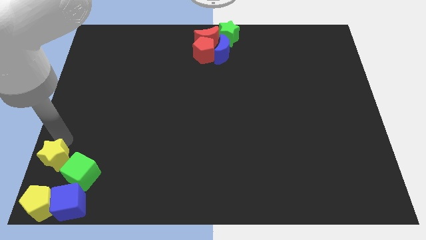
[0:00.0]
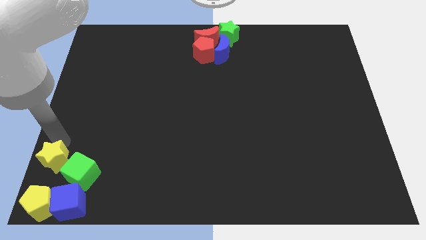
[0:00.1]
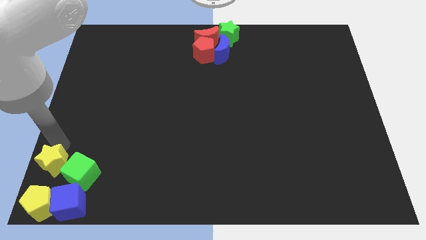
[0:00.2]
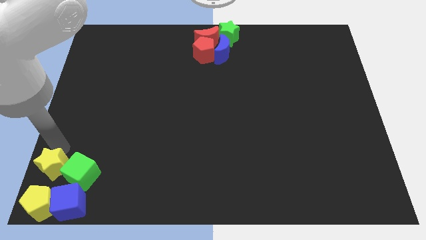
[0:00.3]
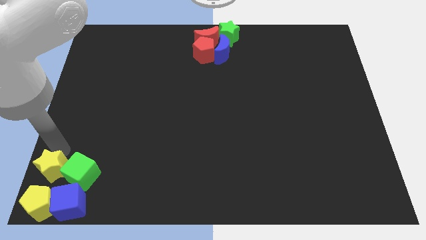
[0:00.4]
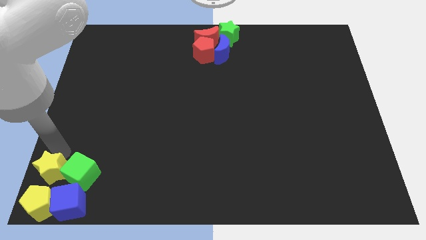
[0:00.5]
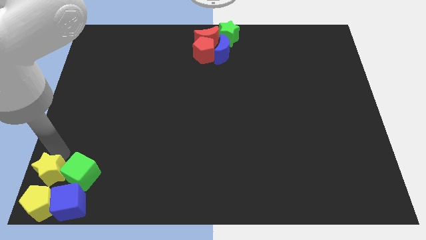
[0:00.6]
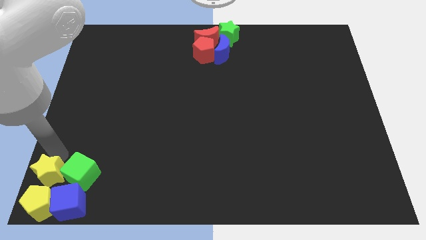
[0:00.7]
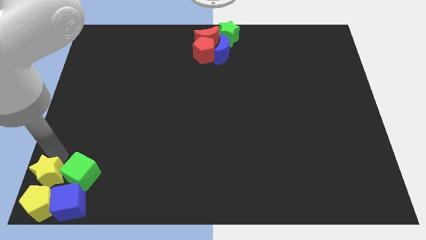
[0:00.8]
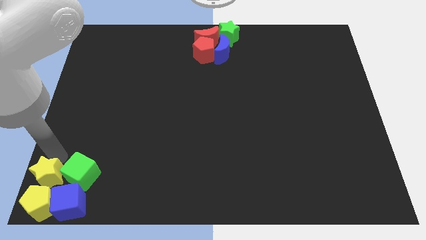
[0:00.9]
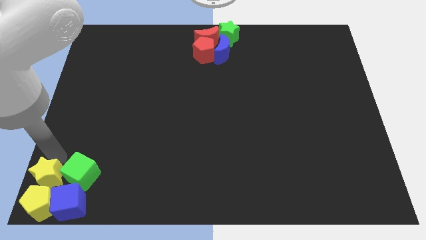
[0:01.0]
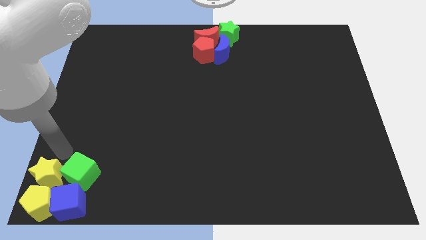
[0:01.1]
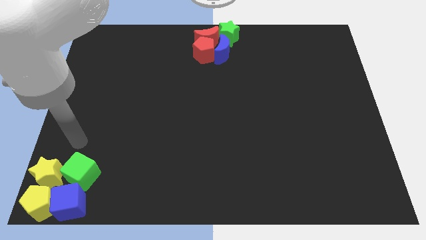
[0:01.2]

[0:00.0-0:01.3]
push the yellow star to the top of the yellow pentagon

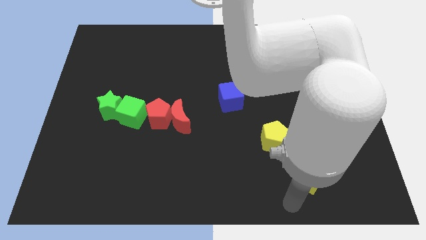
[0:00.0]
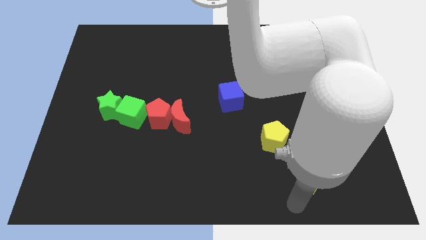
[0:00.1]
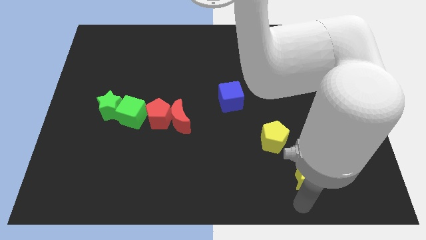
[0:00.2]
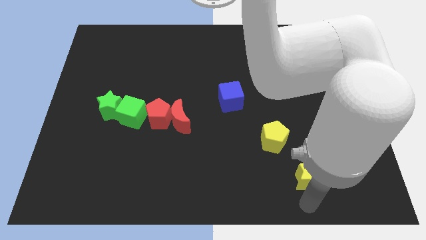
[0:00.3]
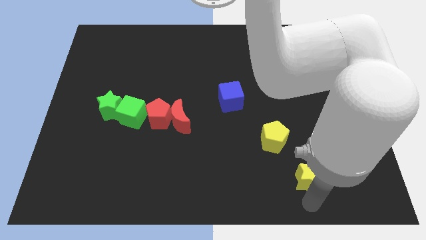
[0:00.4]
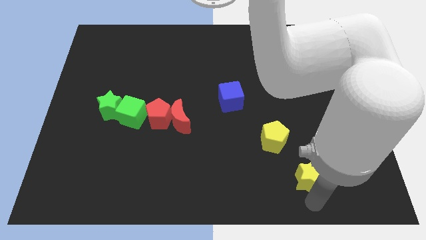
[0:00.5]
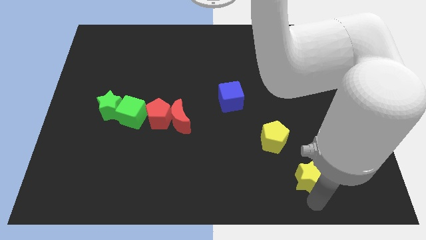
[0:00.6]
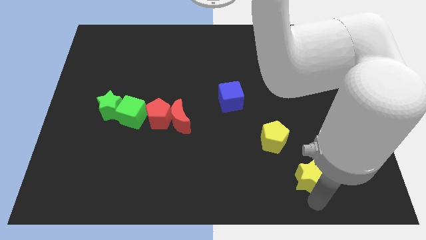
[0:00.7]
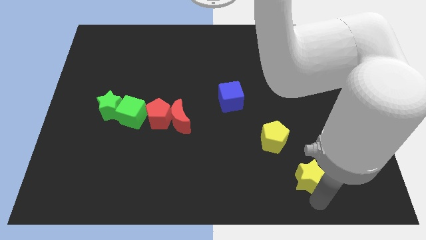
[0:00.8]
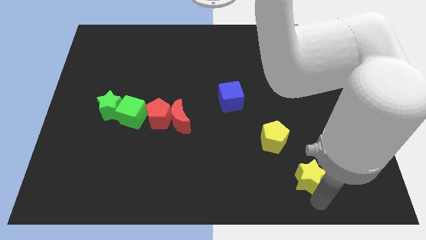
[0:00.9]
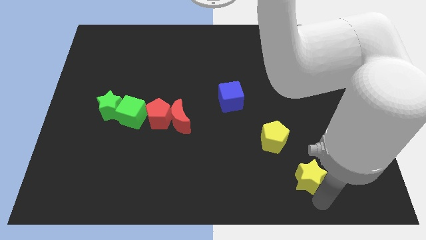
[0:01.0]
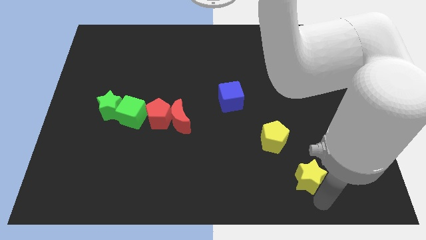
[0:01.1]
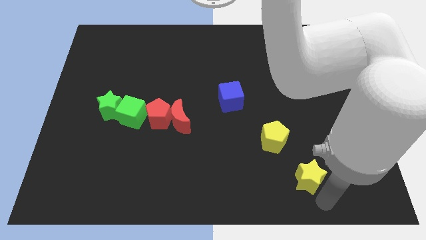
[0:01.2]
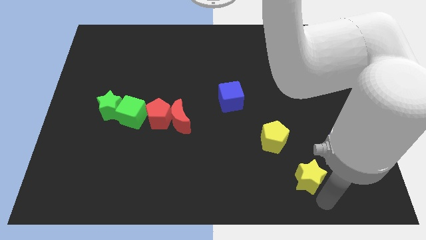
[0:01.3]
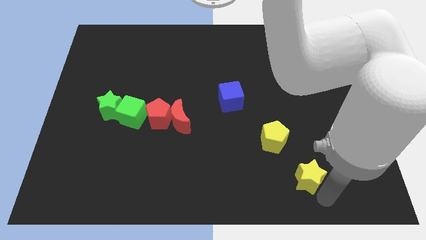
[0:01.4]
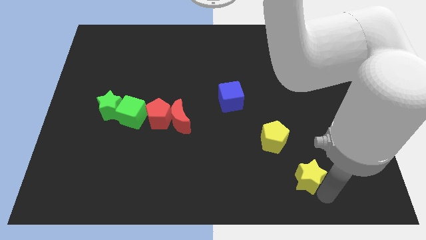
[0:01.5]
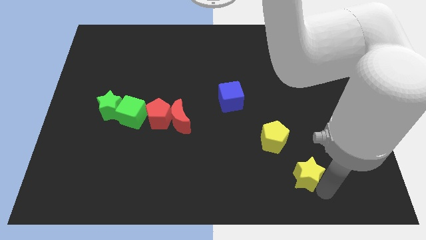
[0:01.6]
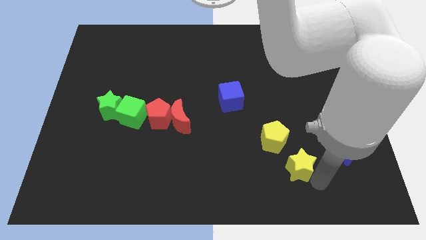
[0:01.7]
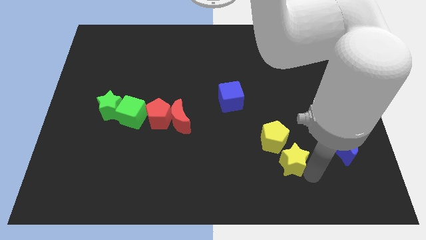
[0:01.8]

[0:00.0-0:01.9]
move the yellow star close to the yellow pentagon

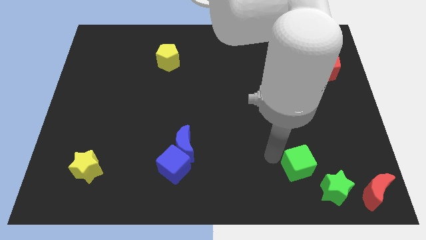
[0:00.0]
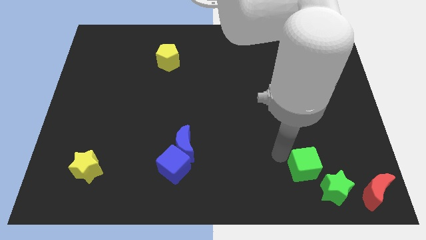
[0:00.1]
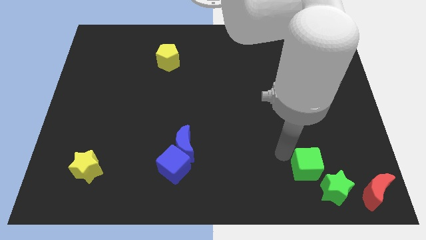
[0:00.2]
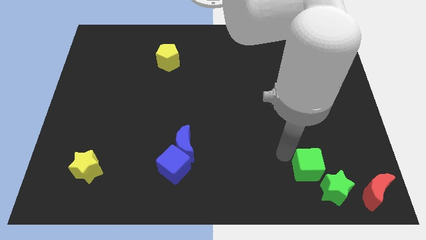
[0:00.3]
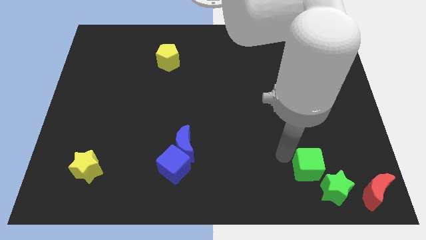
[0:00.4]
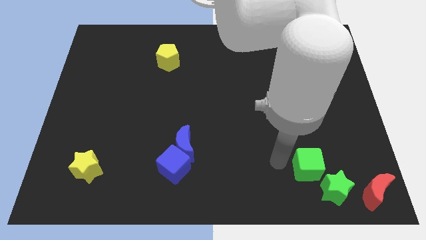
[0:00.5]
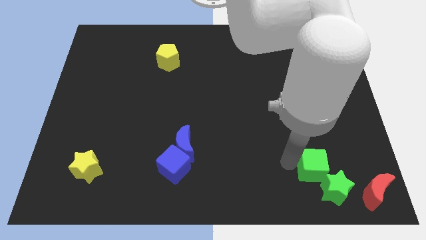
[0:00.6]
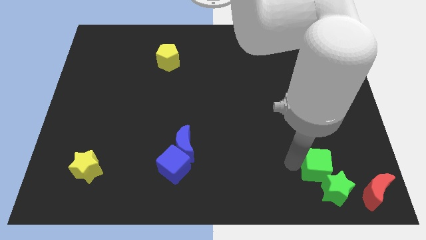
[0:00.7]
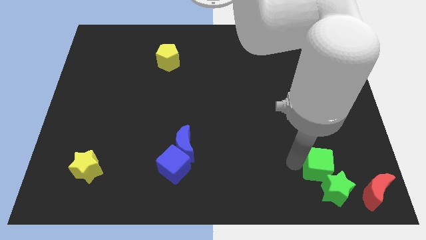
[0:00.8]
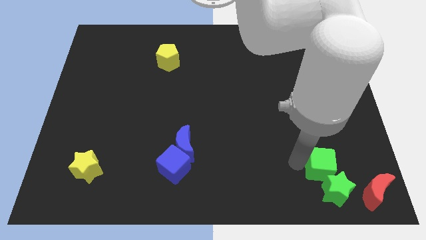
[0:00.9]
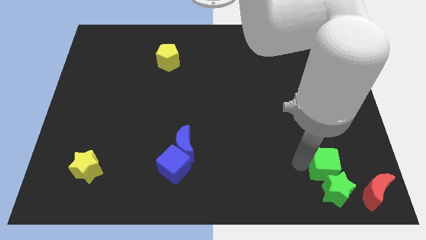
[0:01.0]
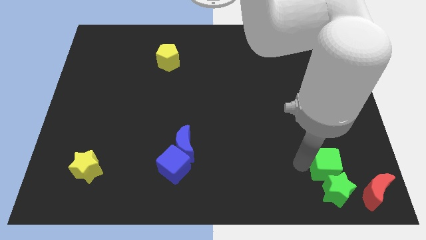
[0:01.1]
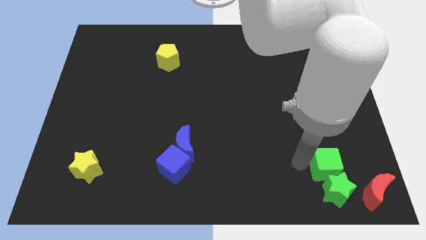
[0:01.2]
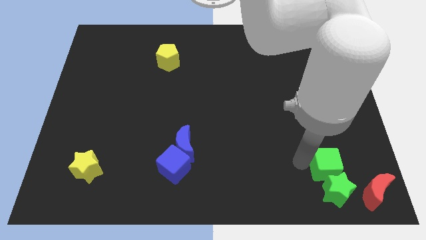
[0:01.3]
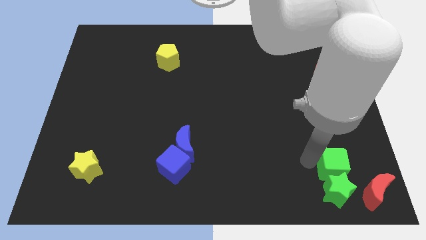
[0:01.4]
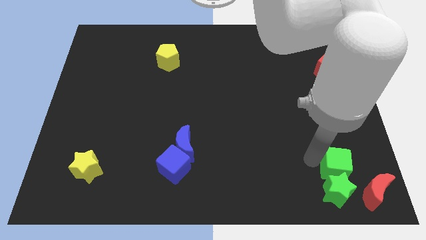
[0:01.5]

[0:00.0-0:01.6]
push the green cube into the green star

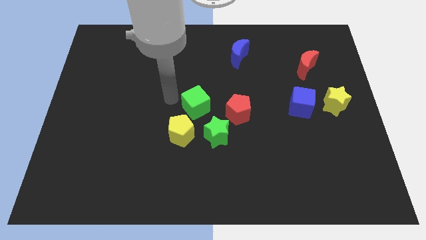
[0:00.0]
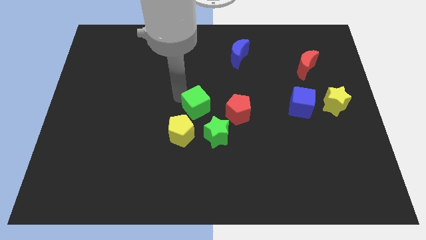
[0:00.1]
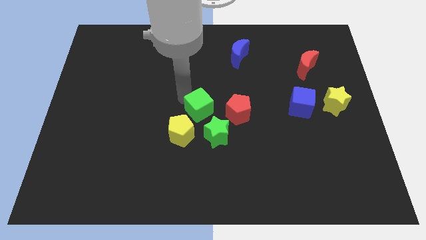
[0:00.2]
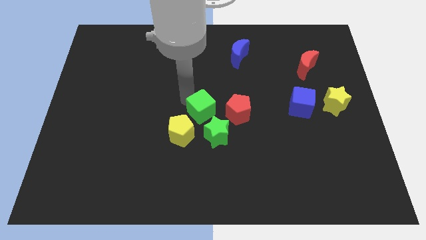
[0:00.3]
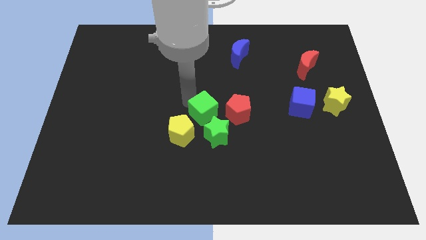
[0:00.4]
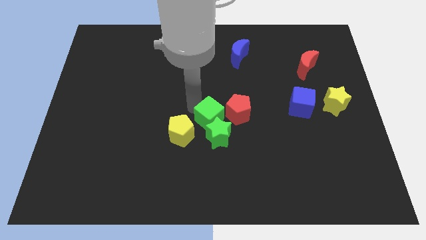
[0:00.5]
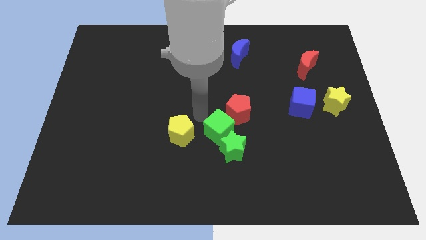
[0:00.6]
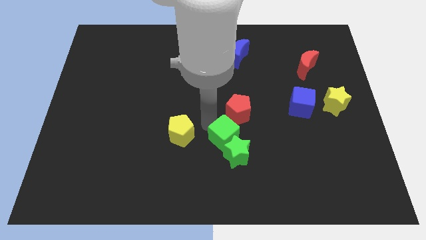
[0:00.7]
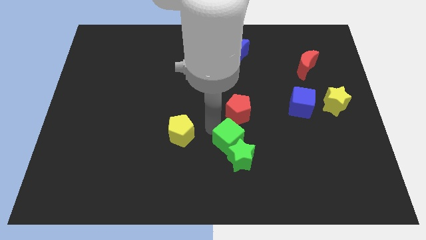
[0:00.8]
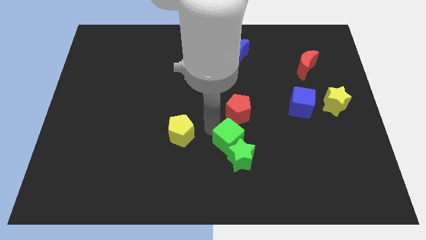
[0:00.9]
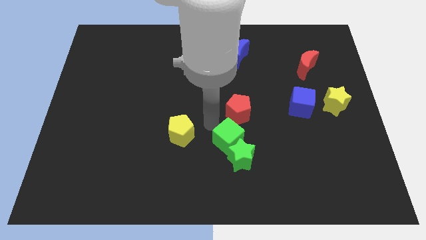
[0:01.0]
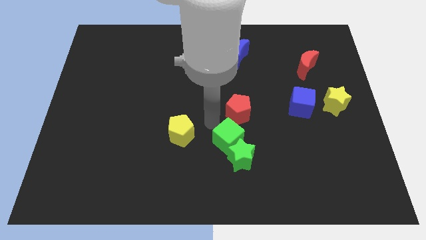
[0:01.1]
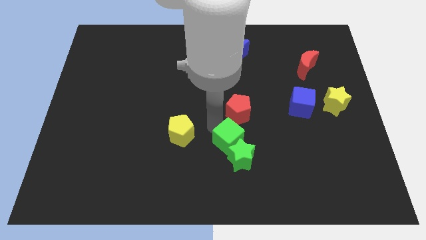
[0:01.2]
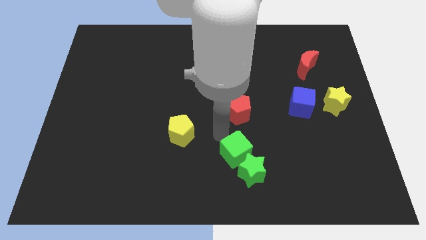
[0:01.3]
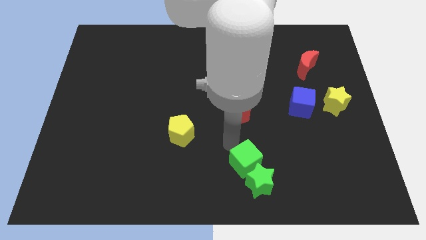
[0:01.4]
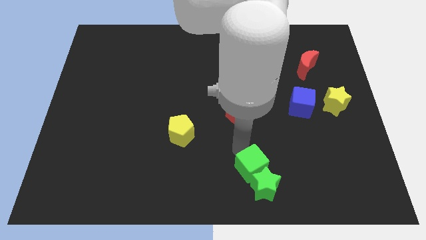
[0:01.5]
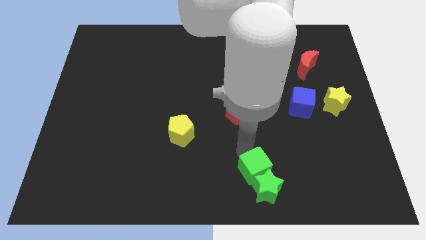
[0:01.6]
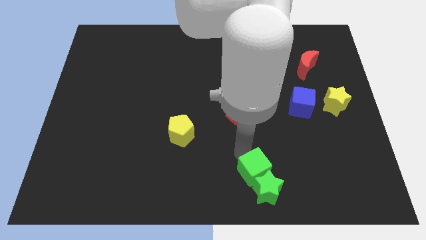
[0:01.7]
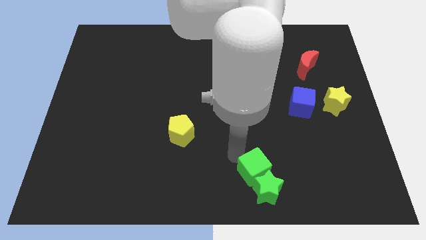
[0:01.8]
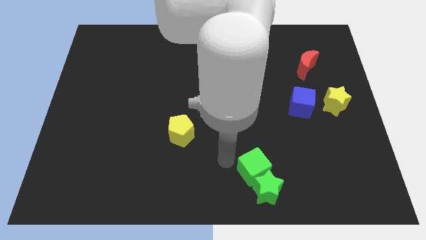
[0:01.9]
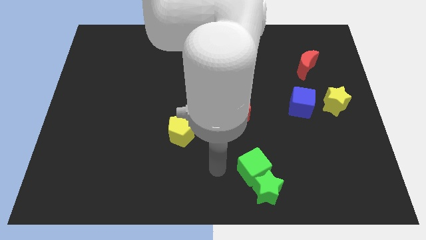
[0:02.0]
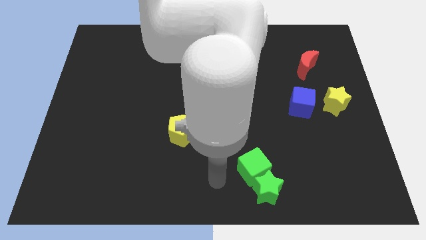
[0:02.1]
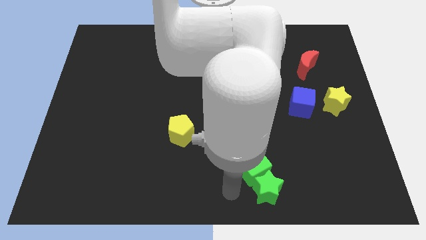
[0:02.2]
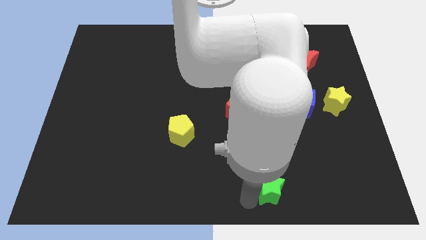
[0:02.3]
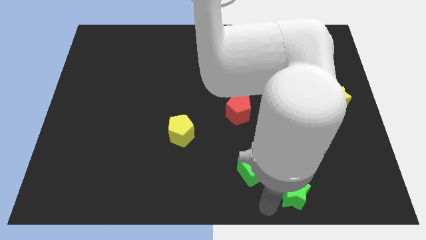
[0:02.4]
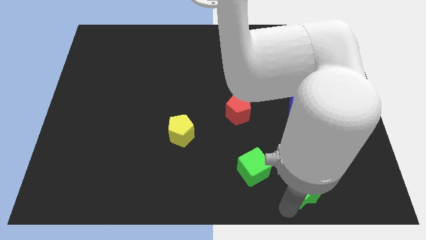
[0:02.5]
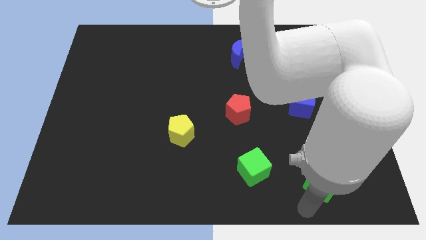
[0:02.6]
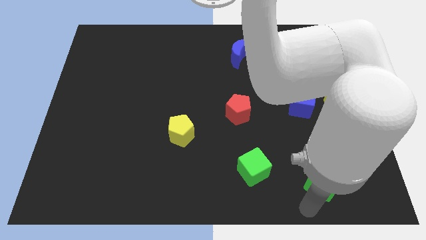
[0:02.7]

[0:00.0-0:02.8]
push the green cube and green star towards the bottom of the board

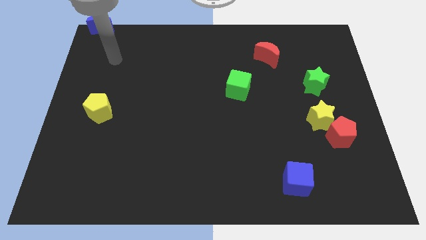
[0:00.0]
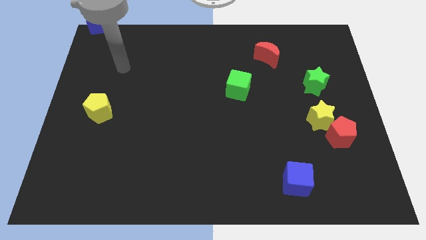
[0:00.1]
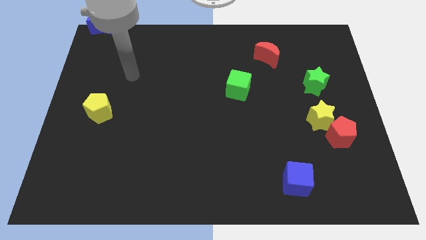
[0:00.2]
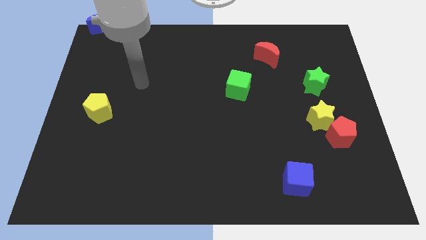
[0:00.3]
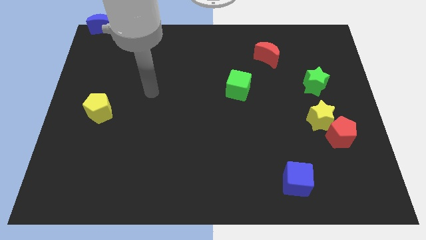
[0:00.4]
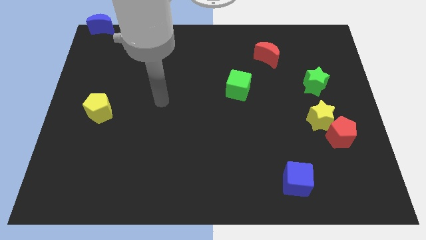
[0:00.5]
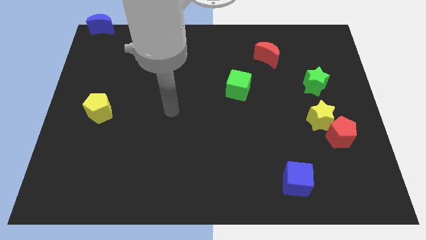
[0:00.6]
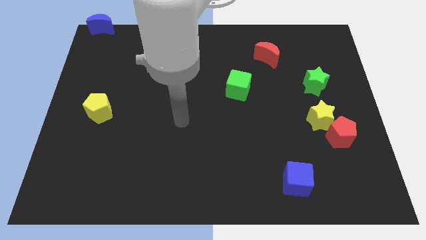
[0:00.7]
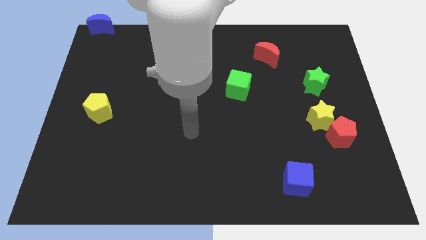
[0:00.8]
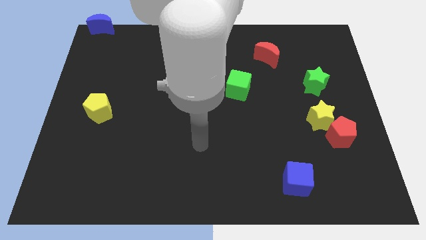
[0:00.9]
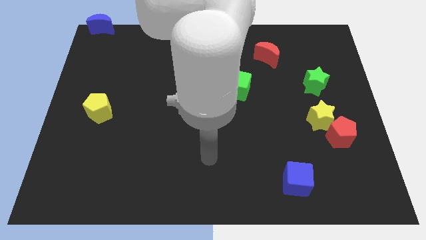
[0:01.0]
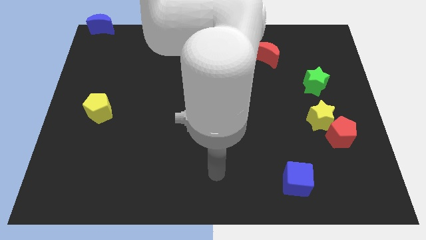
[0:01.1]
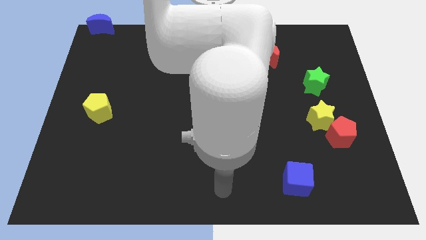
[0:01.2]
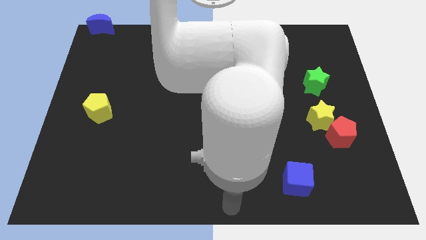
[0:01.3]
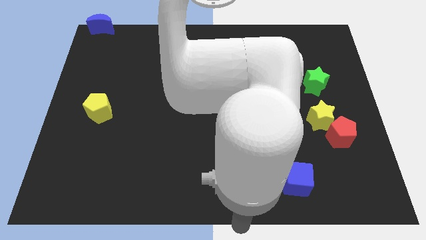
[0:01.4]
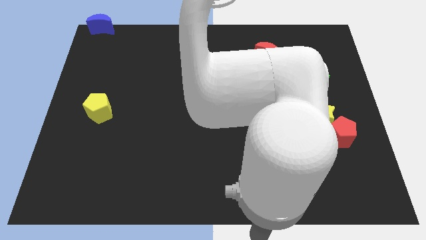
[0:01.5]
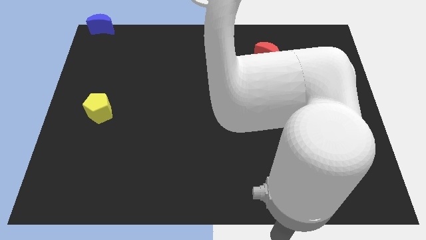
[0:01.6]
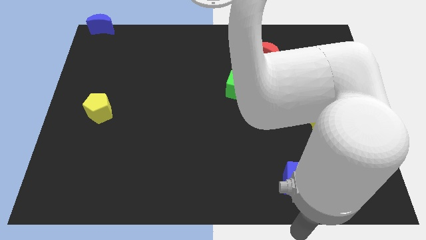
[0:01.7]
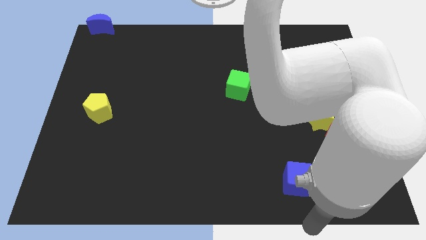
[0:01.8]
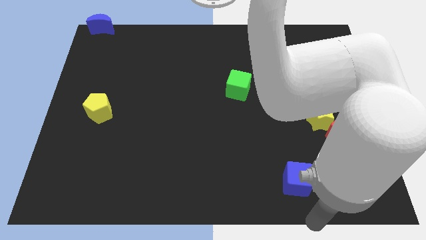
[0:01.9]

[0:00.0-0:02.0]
move your hand towards the bottom of the blue cube
